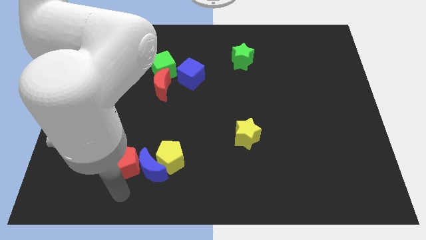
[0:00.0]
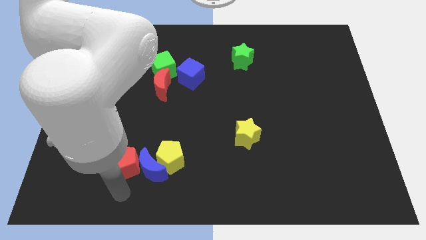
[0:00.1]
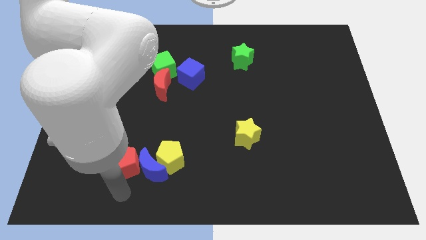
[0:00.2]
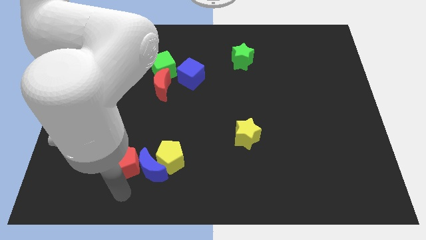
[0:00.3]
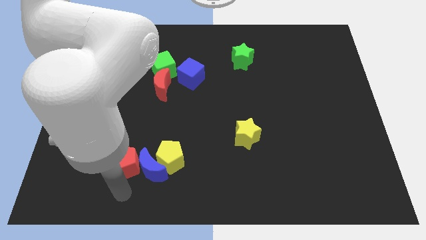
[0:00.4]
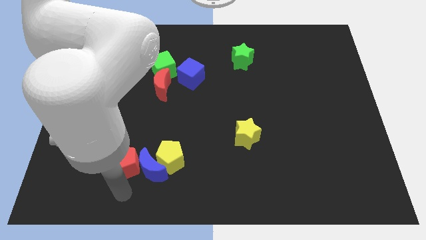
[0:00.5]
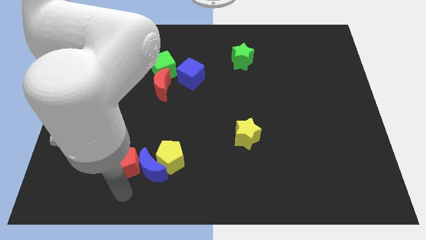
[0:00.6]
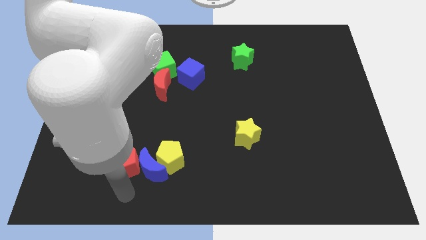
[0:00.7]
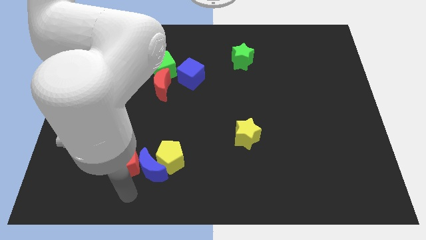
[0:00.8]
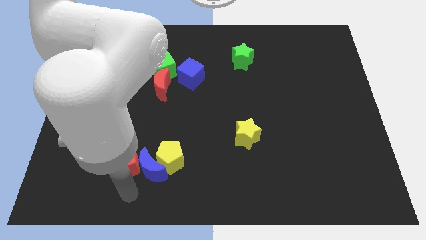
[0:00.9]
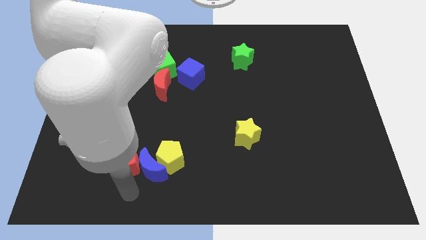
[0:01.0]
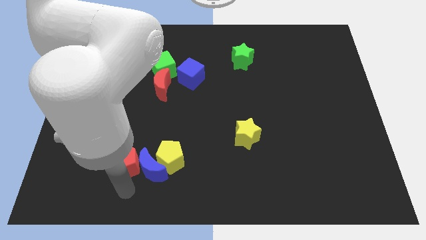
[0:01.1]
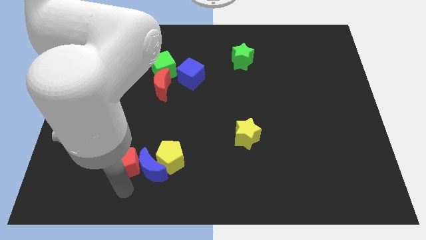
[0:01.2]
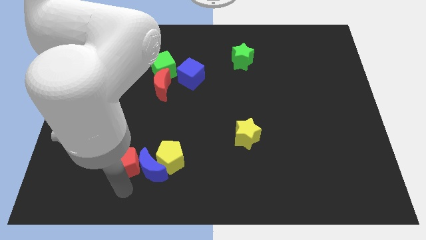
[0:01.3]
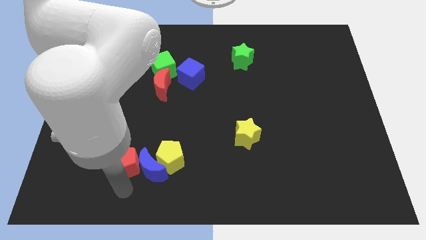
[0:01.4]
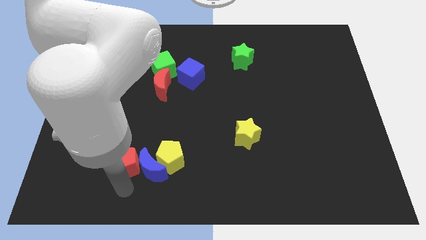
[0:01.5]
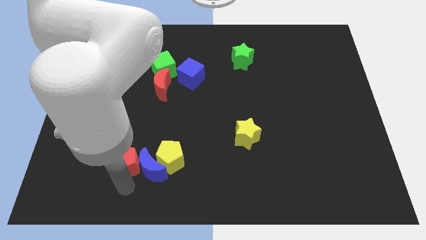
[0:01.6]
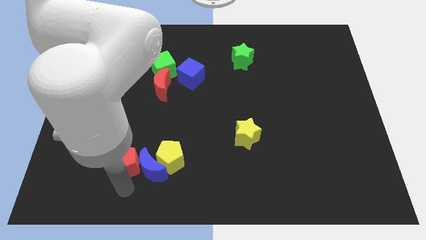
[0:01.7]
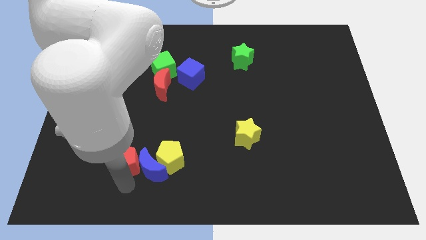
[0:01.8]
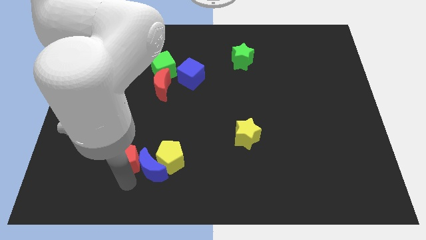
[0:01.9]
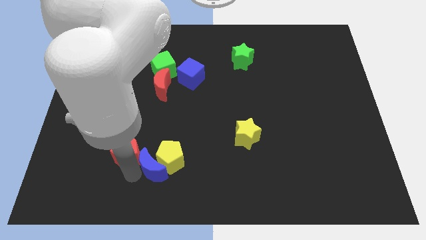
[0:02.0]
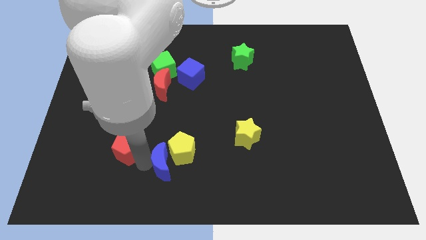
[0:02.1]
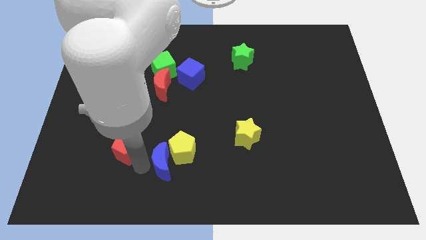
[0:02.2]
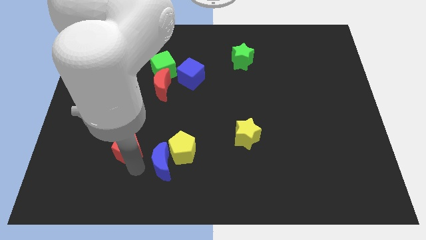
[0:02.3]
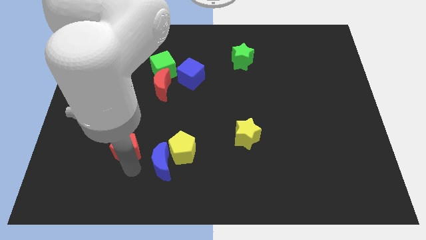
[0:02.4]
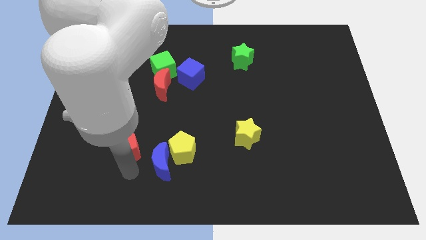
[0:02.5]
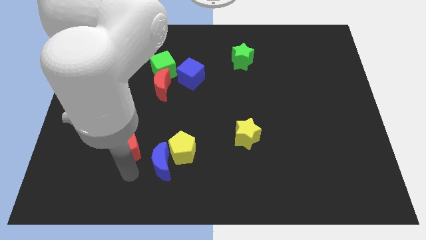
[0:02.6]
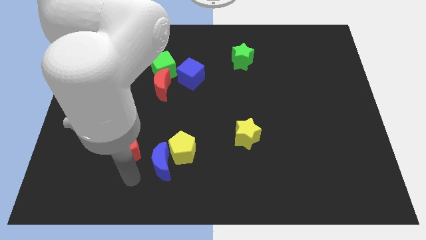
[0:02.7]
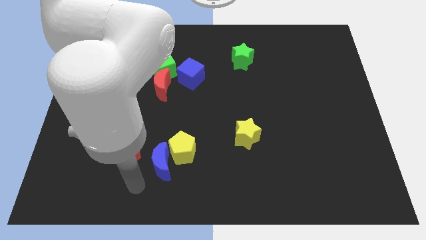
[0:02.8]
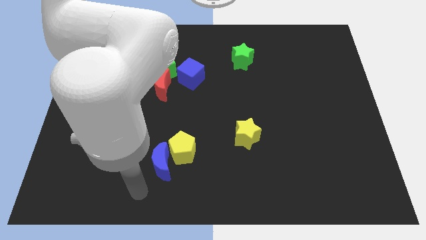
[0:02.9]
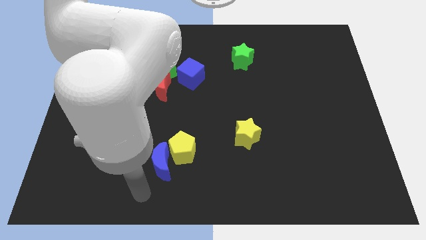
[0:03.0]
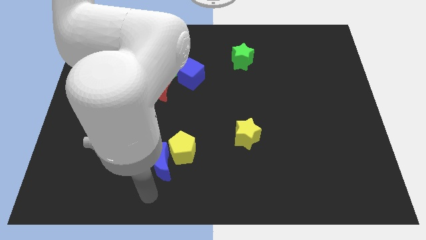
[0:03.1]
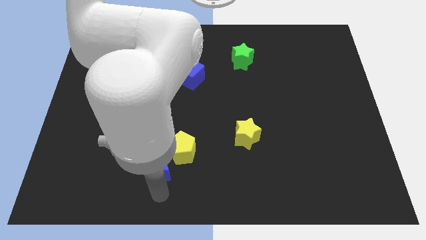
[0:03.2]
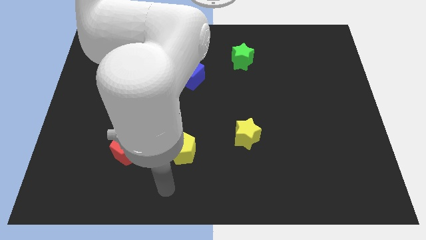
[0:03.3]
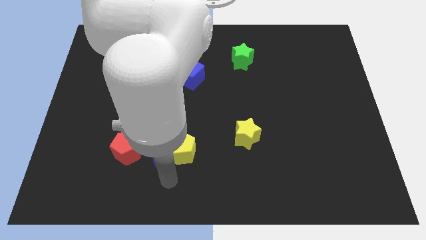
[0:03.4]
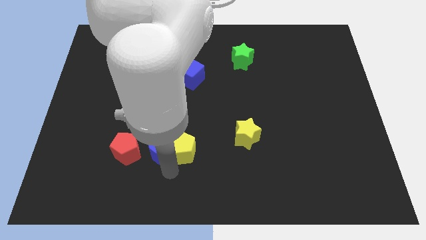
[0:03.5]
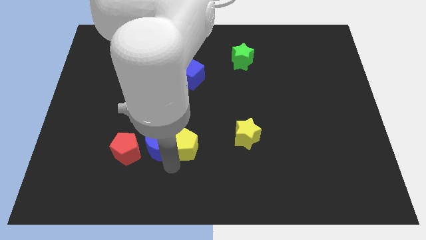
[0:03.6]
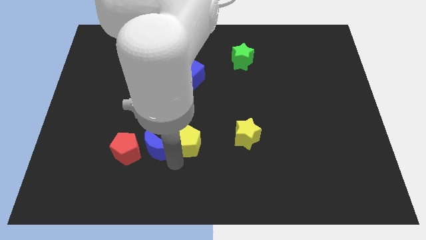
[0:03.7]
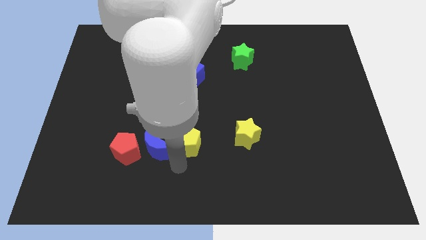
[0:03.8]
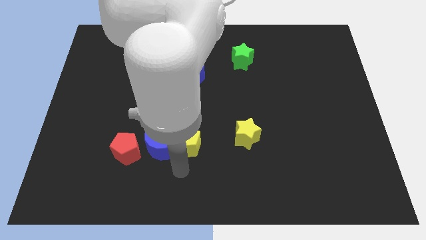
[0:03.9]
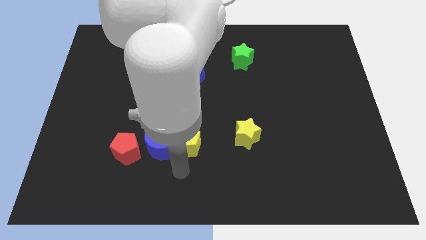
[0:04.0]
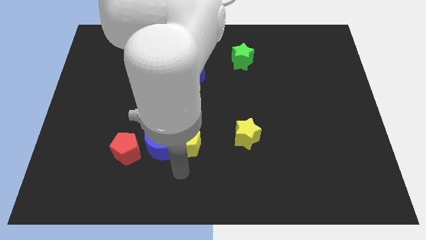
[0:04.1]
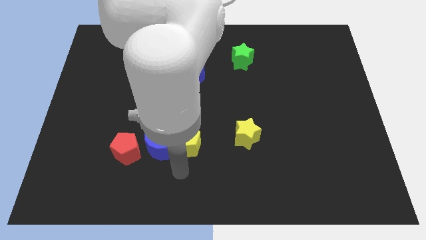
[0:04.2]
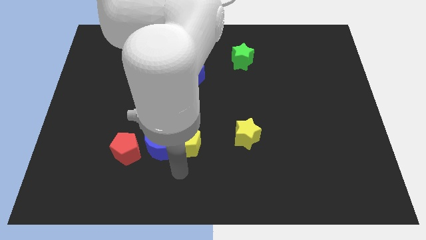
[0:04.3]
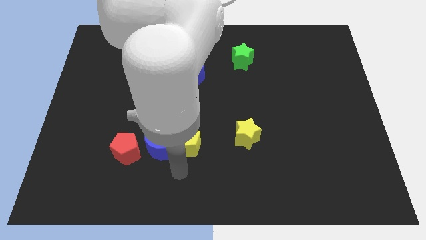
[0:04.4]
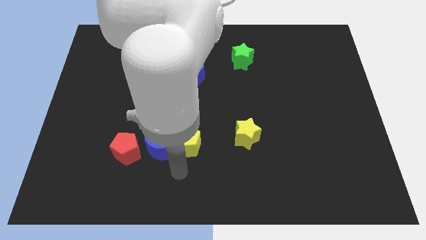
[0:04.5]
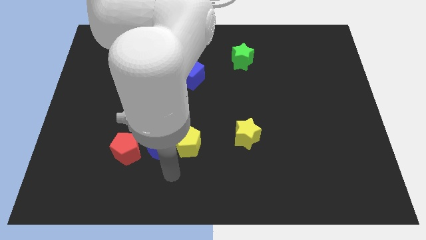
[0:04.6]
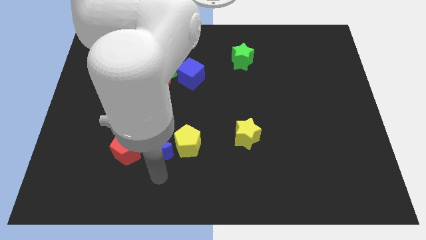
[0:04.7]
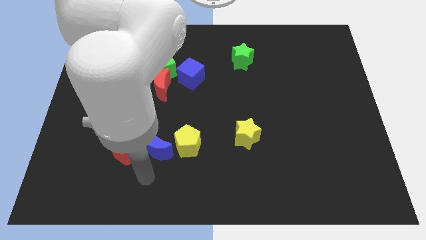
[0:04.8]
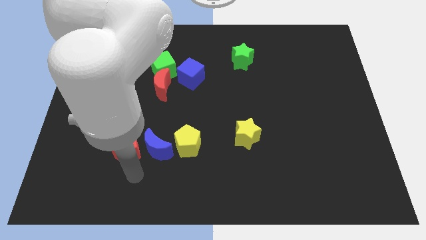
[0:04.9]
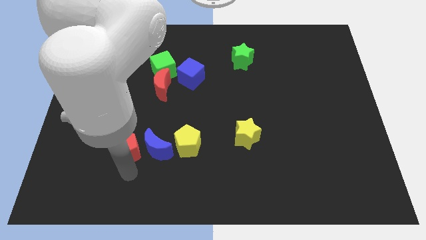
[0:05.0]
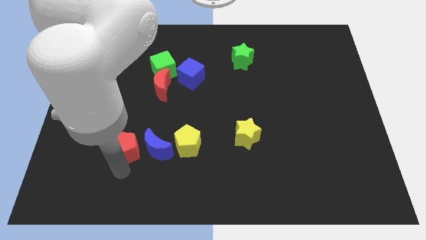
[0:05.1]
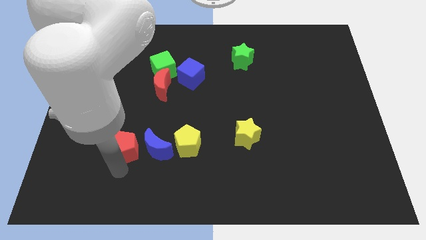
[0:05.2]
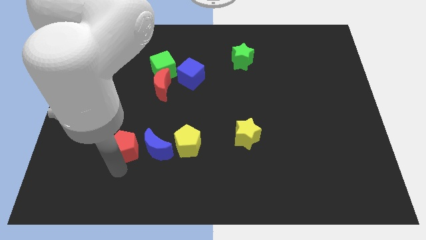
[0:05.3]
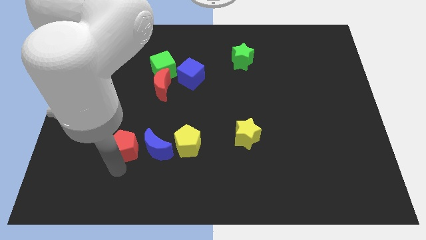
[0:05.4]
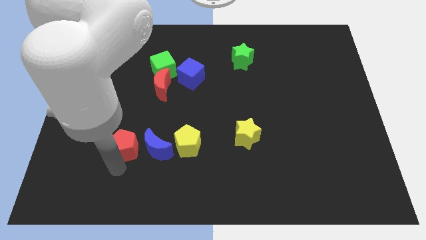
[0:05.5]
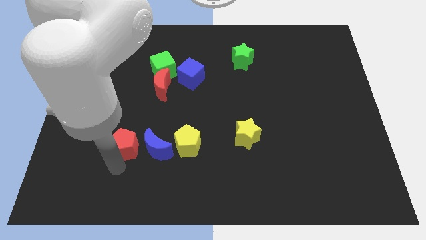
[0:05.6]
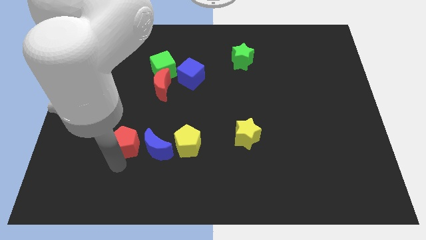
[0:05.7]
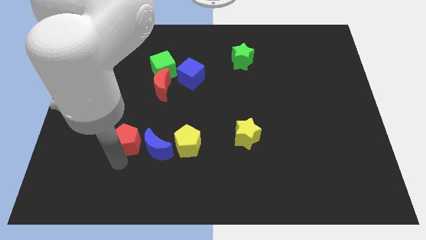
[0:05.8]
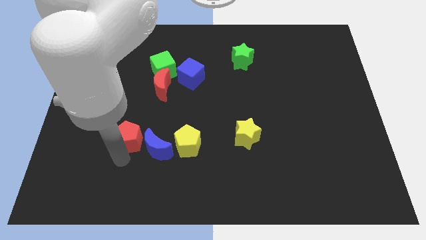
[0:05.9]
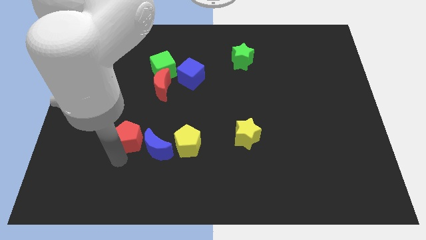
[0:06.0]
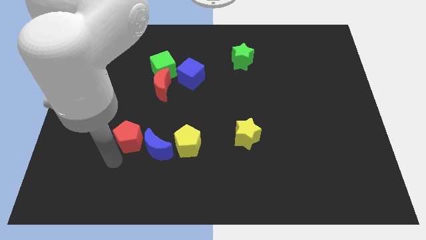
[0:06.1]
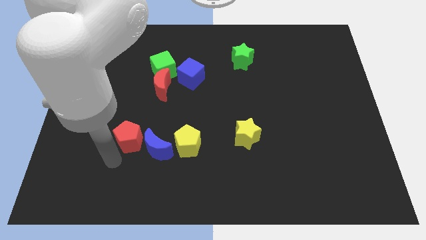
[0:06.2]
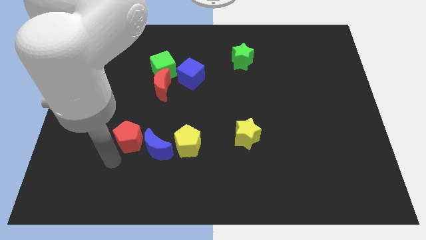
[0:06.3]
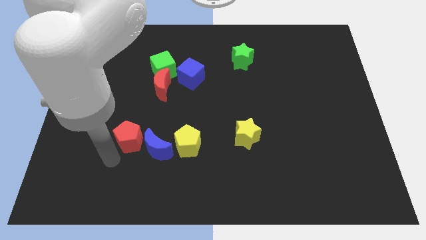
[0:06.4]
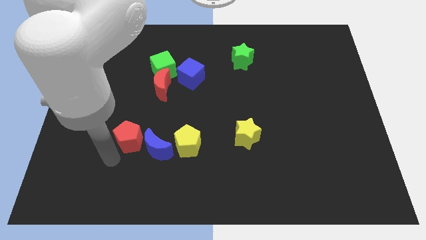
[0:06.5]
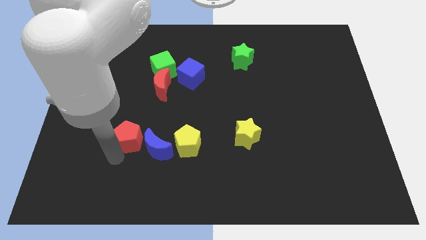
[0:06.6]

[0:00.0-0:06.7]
arrange the red pentagon blue moon and yellow pentagon to form a horizontal line of blocks

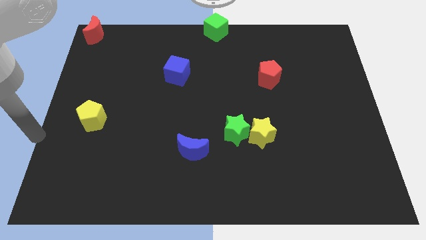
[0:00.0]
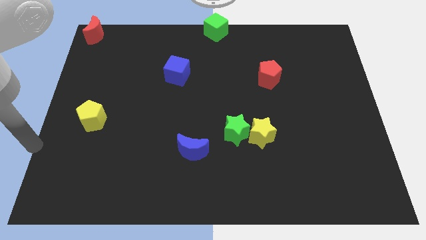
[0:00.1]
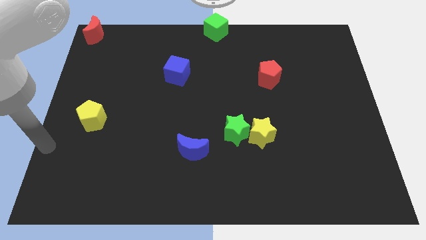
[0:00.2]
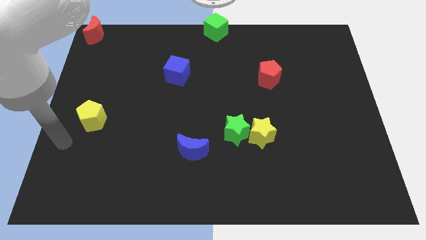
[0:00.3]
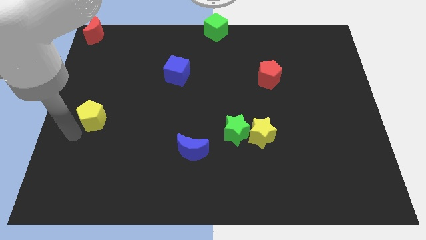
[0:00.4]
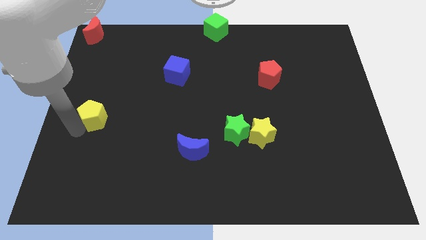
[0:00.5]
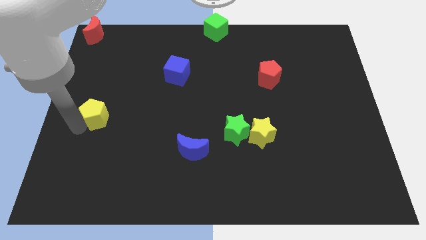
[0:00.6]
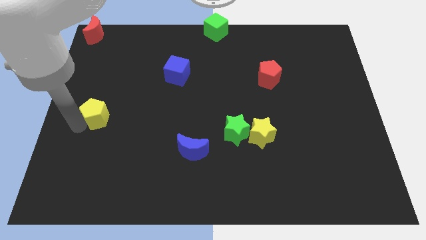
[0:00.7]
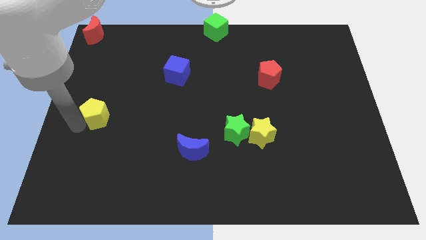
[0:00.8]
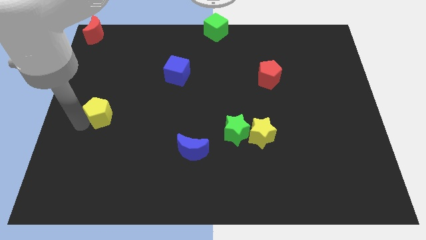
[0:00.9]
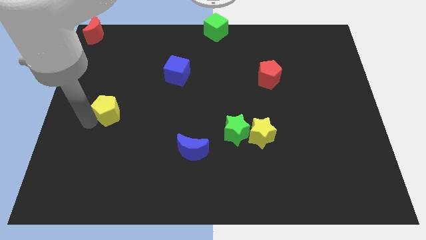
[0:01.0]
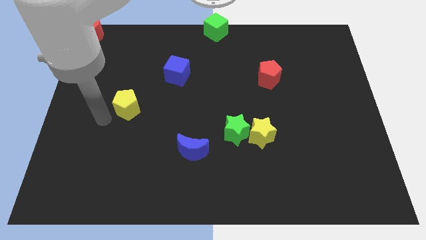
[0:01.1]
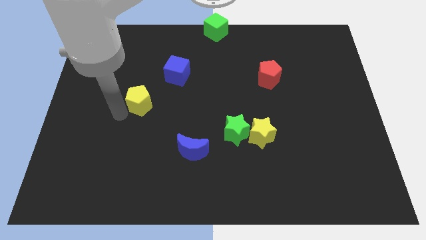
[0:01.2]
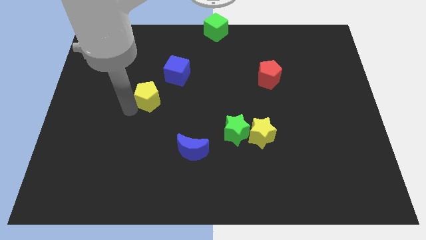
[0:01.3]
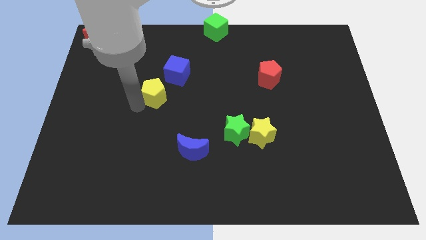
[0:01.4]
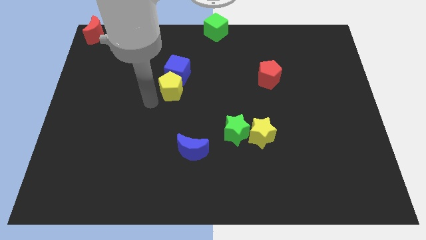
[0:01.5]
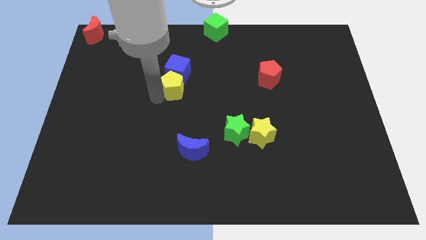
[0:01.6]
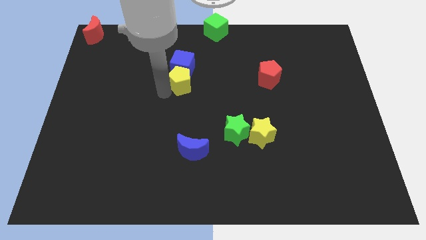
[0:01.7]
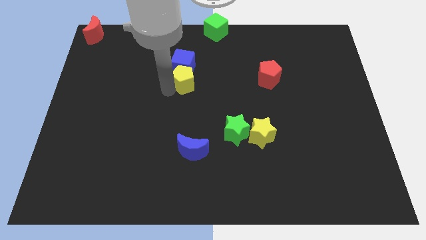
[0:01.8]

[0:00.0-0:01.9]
move the yellow pentagon down to the blue cube

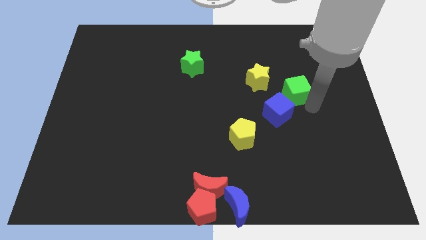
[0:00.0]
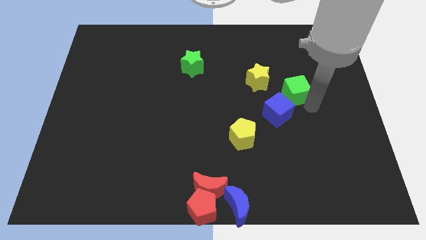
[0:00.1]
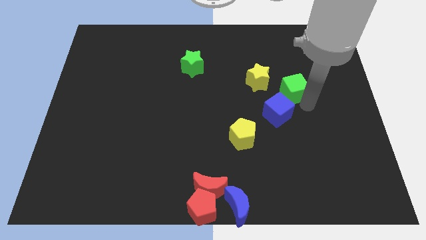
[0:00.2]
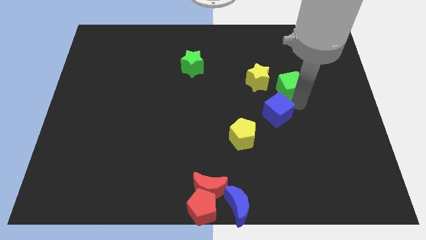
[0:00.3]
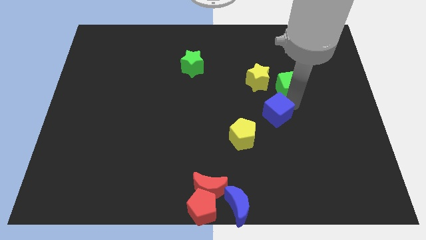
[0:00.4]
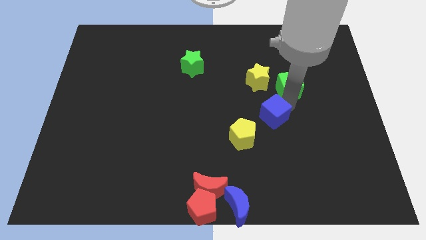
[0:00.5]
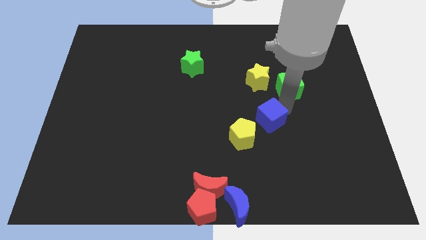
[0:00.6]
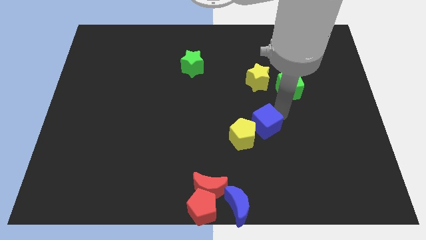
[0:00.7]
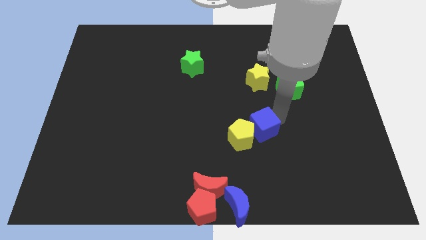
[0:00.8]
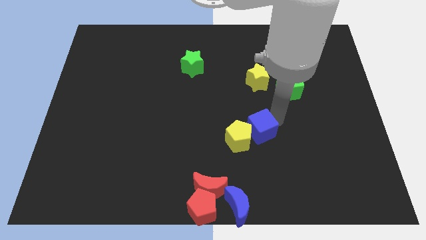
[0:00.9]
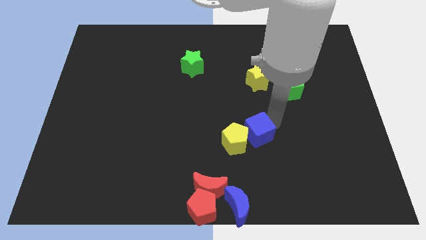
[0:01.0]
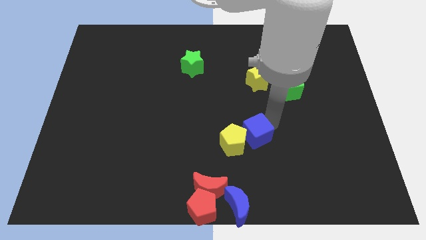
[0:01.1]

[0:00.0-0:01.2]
push blue cube towards yellow pentagon
